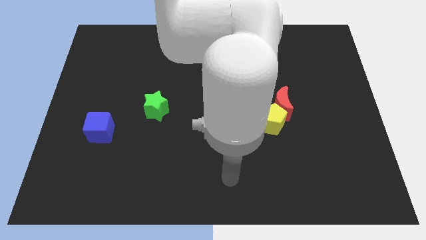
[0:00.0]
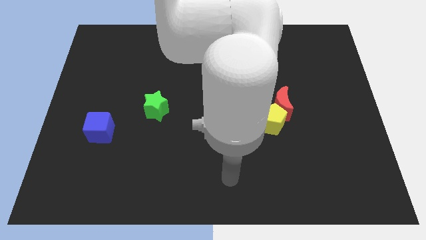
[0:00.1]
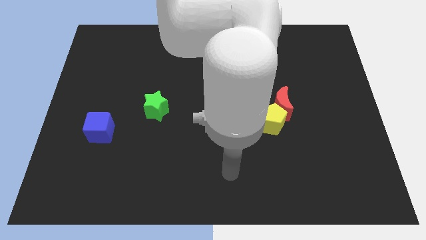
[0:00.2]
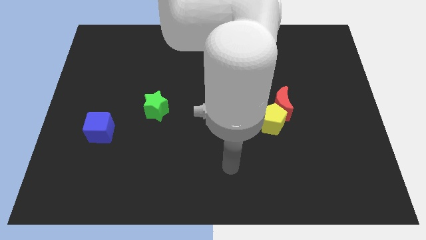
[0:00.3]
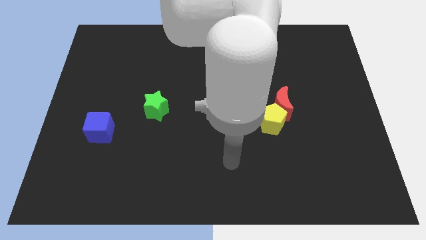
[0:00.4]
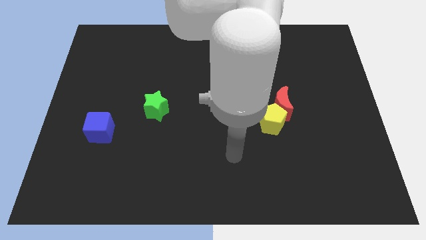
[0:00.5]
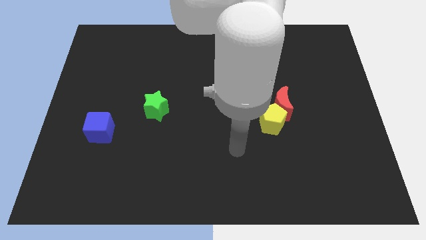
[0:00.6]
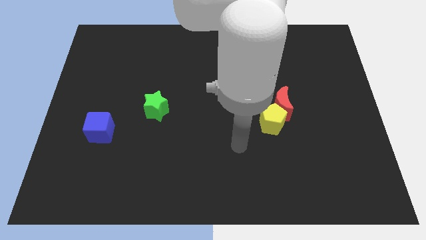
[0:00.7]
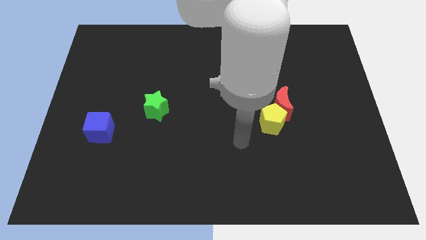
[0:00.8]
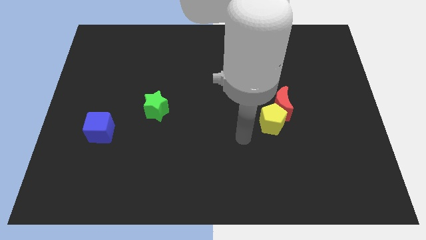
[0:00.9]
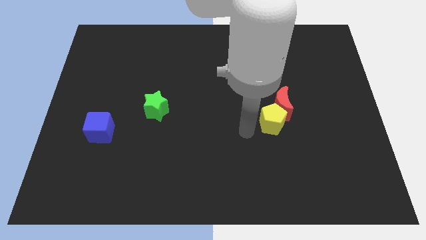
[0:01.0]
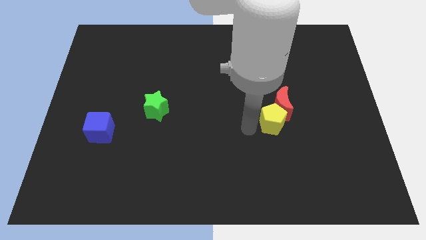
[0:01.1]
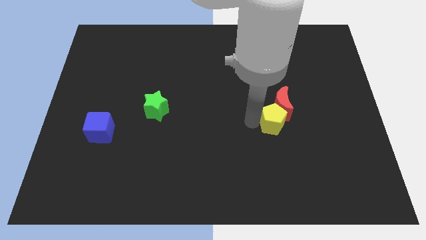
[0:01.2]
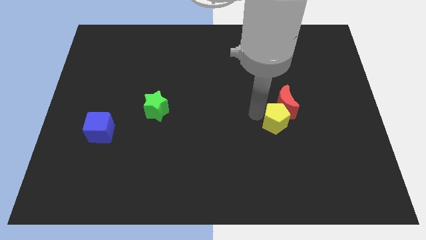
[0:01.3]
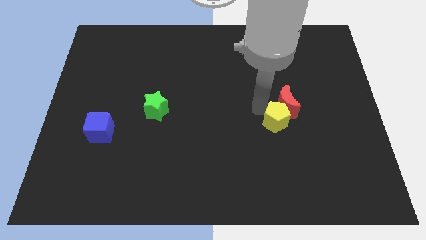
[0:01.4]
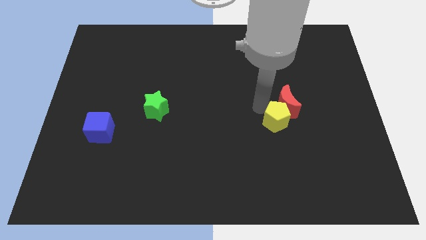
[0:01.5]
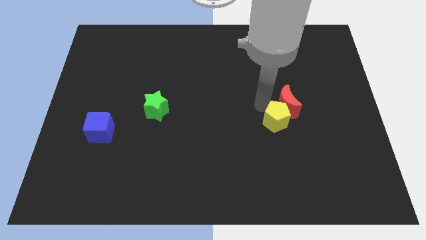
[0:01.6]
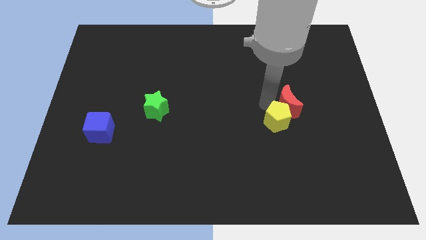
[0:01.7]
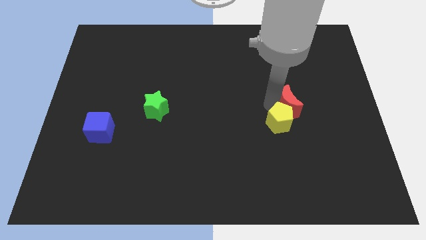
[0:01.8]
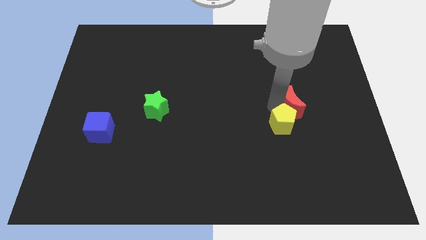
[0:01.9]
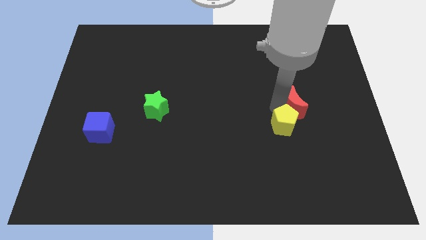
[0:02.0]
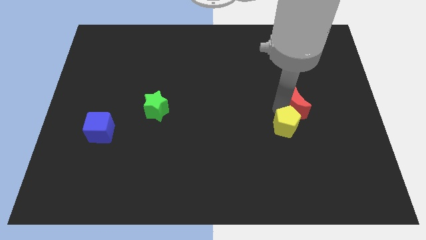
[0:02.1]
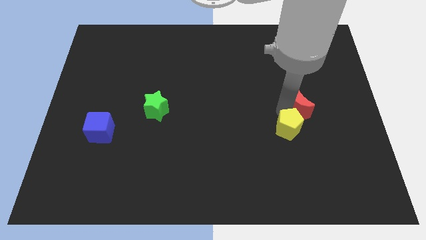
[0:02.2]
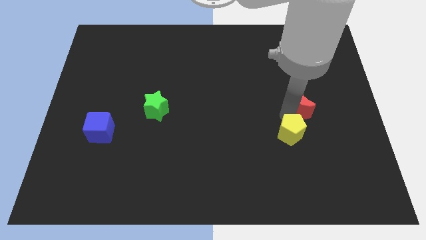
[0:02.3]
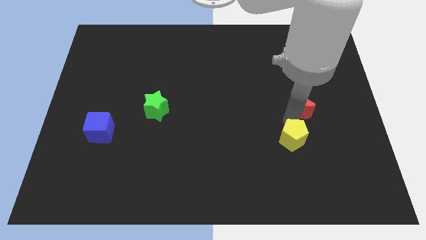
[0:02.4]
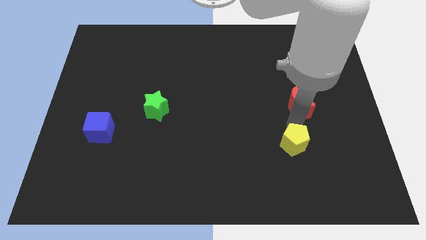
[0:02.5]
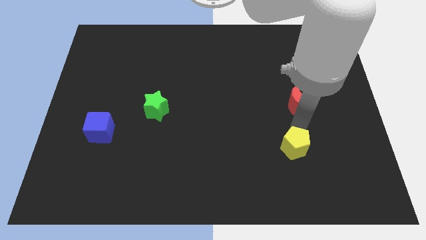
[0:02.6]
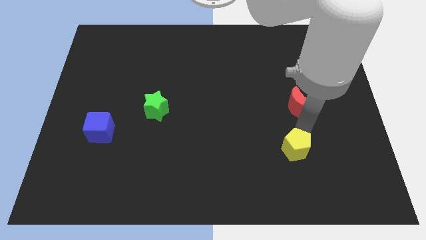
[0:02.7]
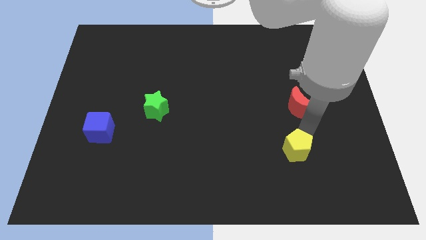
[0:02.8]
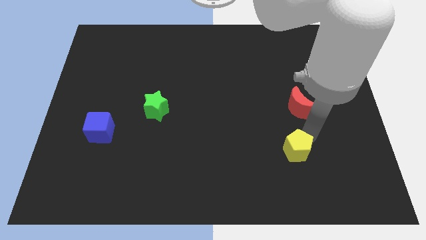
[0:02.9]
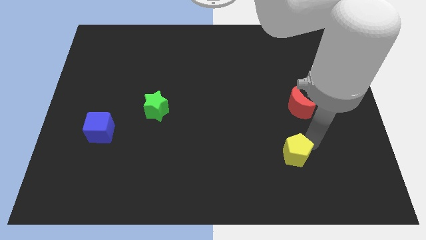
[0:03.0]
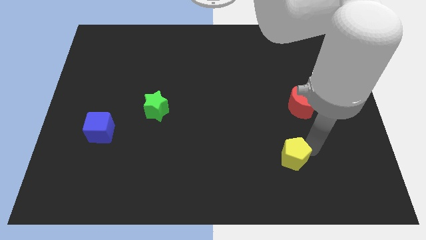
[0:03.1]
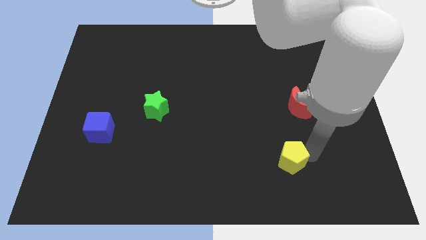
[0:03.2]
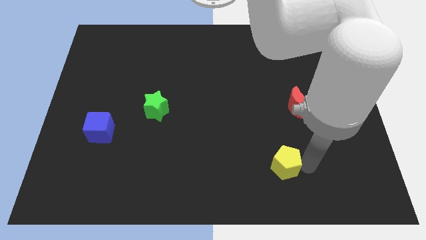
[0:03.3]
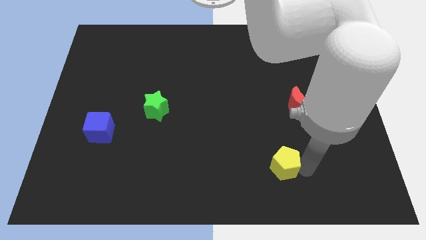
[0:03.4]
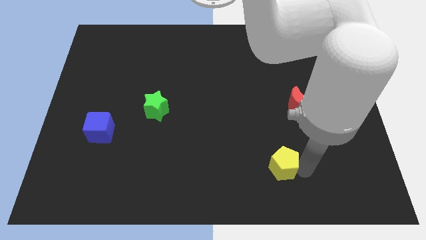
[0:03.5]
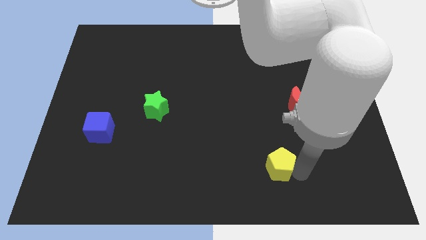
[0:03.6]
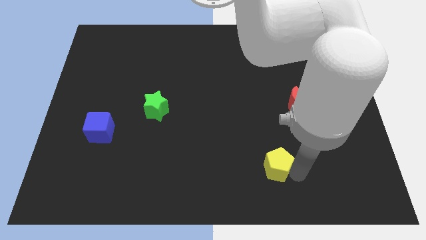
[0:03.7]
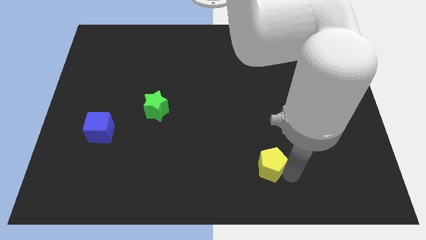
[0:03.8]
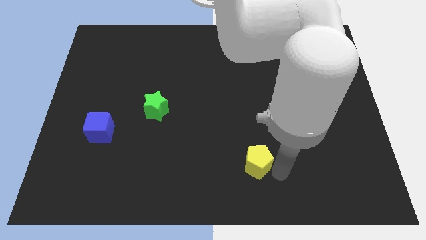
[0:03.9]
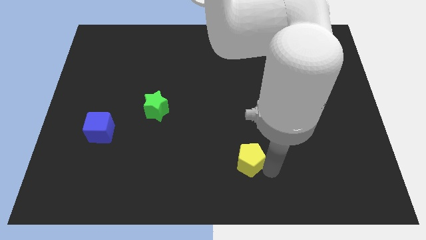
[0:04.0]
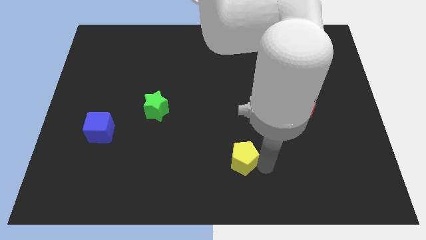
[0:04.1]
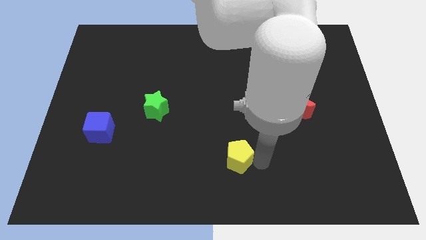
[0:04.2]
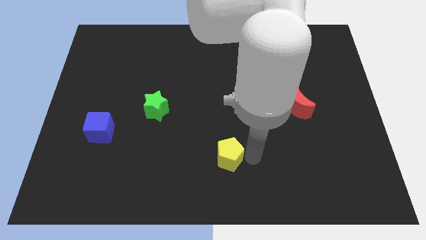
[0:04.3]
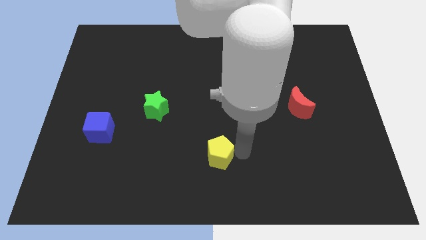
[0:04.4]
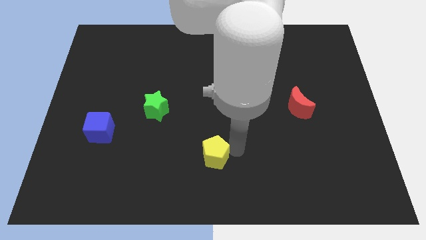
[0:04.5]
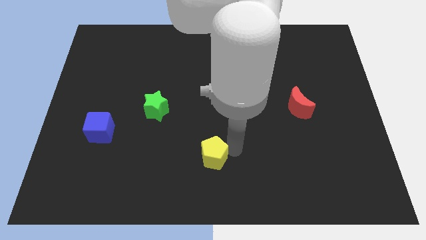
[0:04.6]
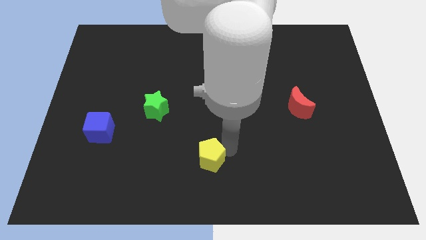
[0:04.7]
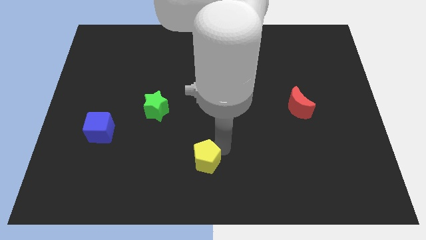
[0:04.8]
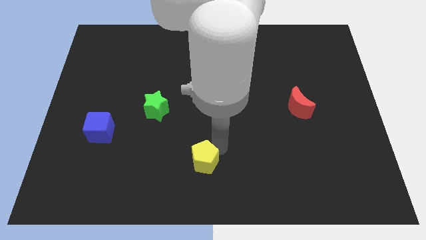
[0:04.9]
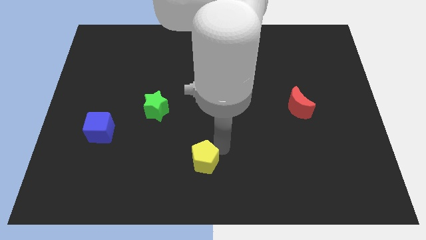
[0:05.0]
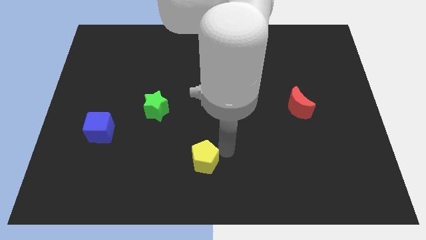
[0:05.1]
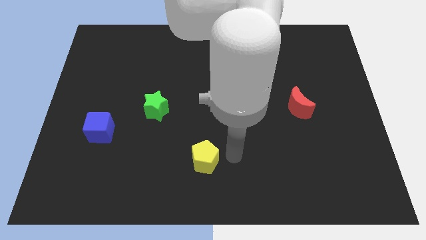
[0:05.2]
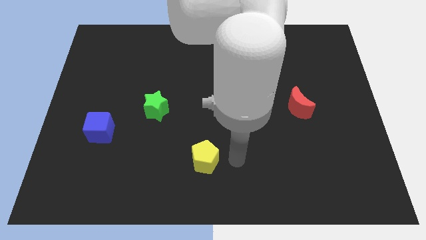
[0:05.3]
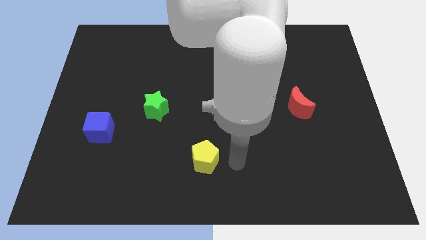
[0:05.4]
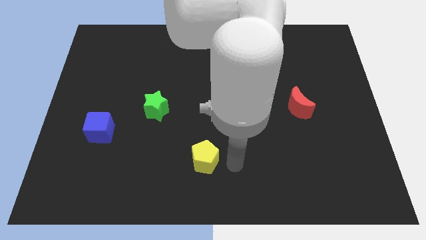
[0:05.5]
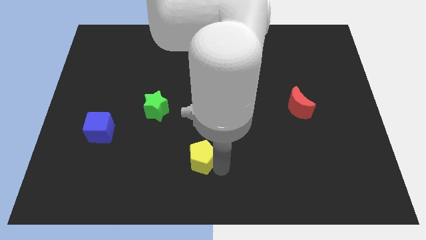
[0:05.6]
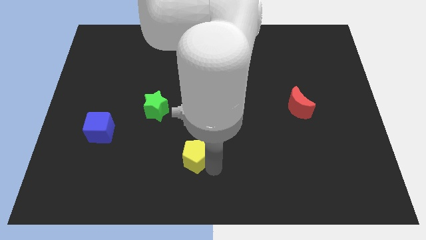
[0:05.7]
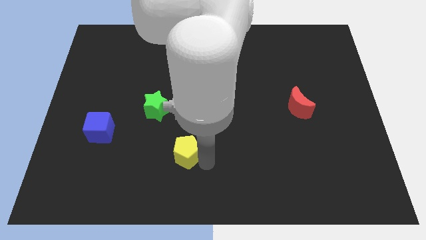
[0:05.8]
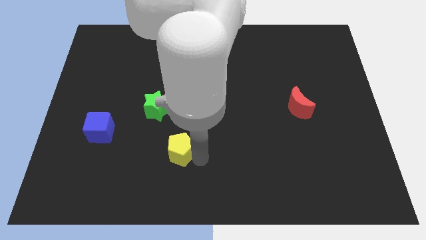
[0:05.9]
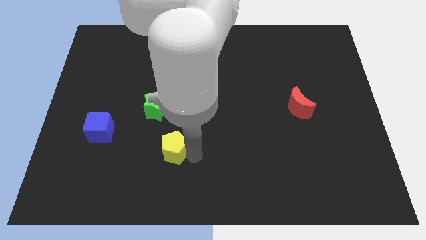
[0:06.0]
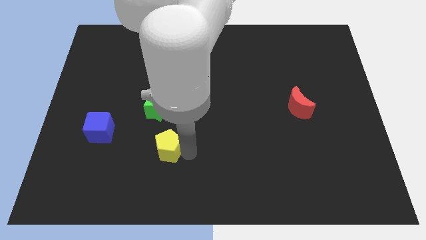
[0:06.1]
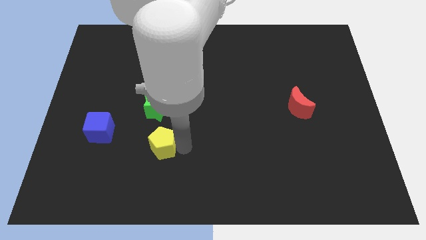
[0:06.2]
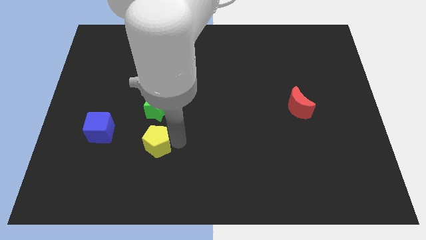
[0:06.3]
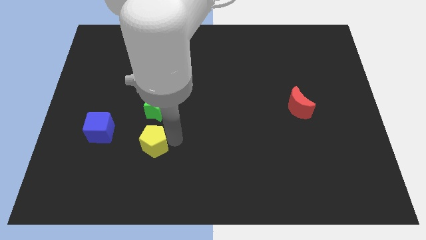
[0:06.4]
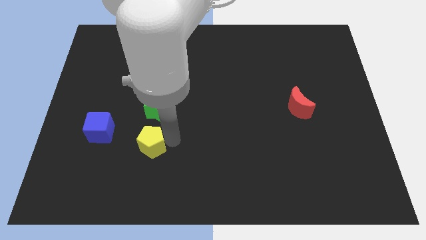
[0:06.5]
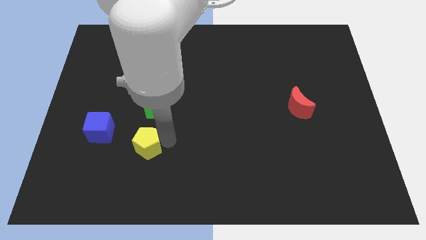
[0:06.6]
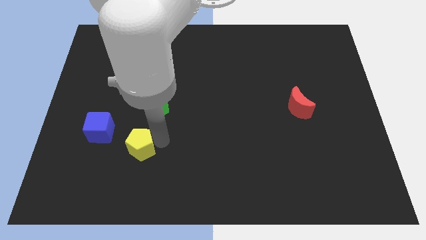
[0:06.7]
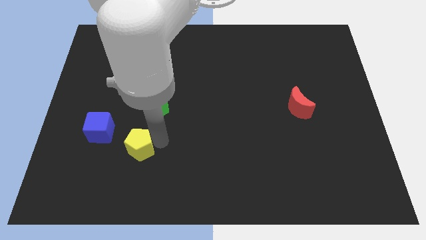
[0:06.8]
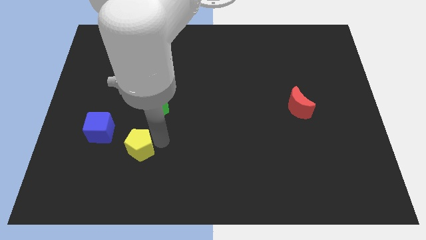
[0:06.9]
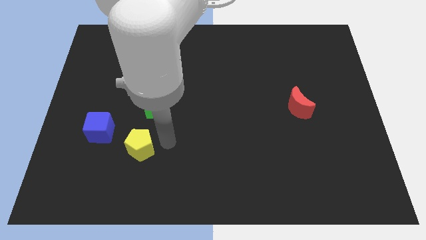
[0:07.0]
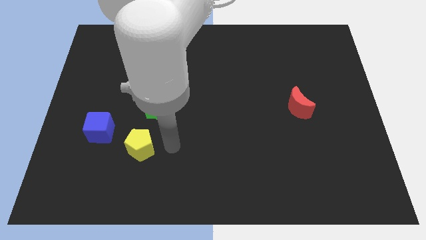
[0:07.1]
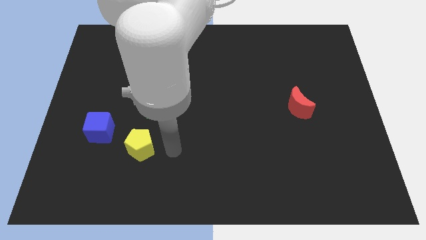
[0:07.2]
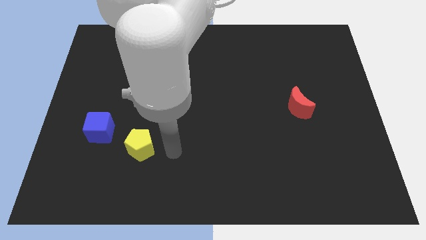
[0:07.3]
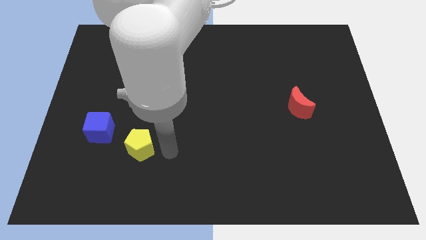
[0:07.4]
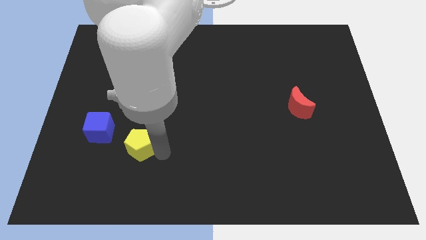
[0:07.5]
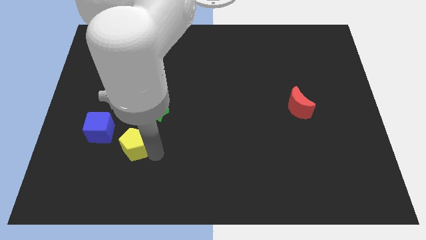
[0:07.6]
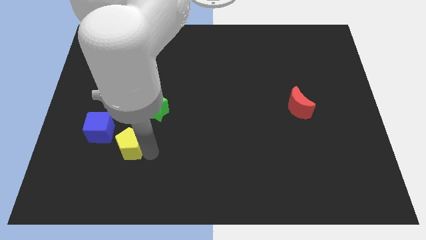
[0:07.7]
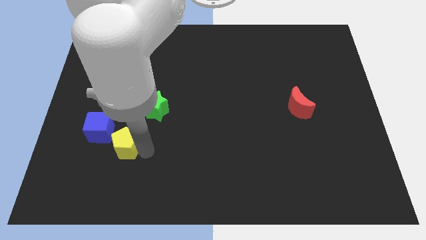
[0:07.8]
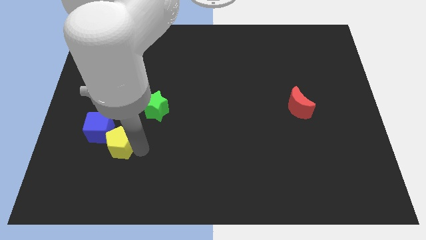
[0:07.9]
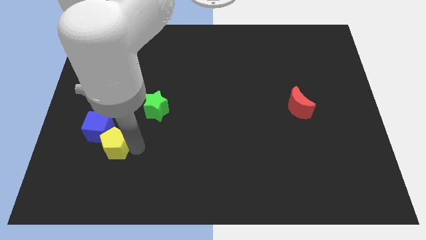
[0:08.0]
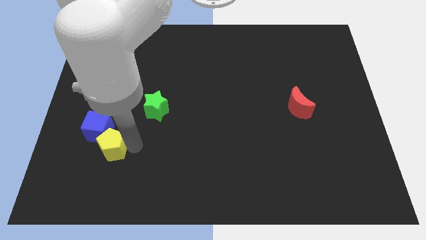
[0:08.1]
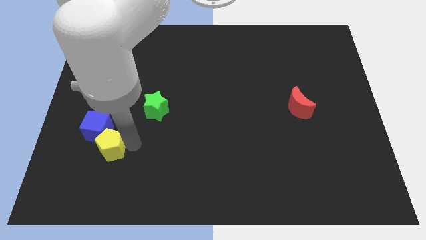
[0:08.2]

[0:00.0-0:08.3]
push the pentagon next to the blue block

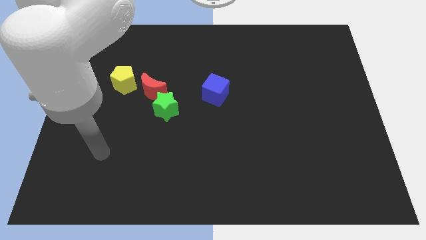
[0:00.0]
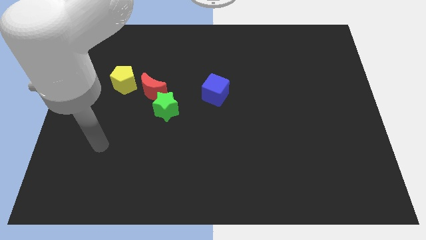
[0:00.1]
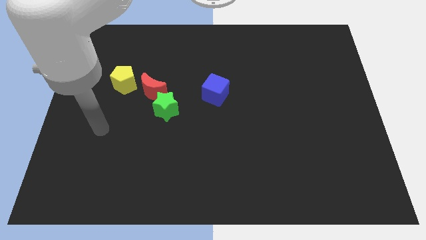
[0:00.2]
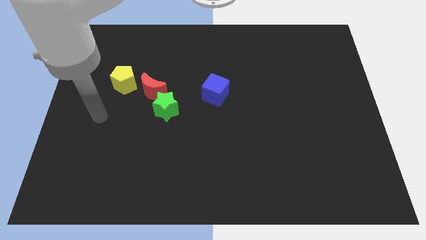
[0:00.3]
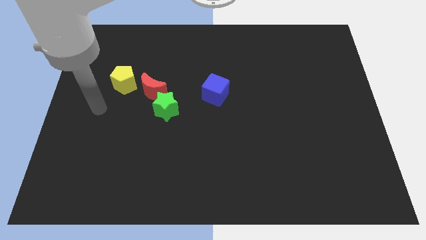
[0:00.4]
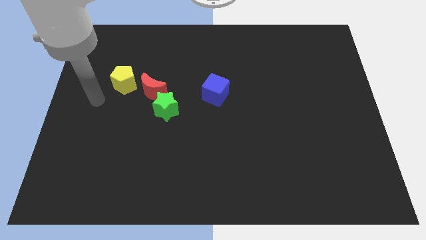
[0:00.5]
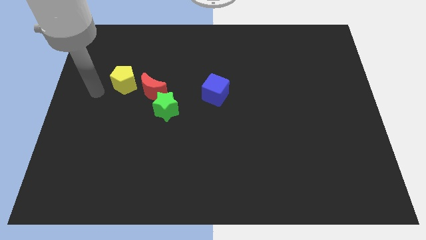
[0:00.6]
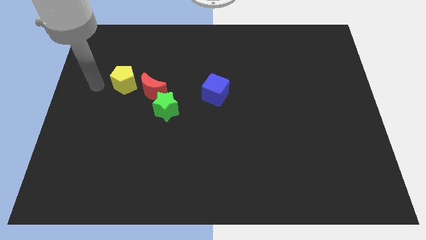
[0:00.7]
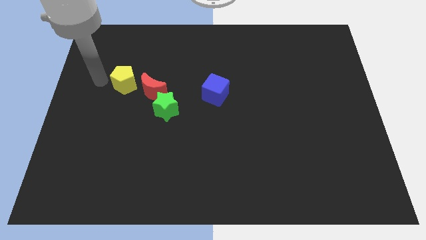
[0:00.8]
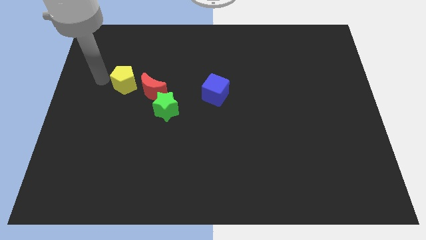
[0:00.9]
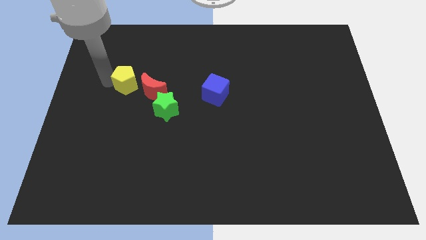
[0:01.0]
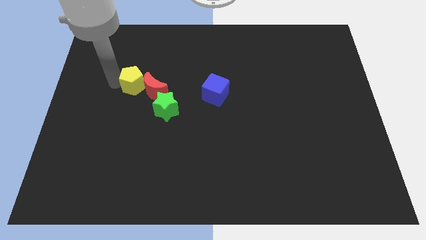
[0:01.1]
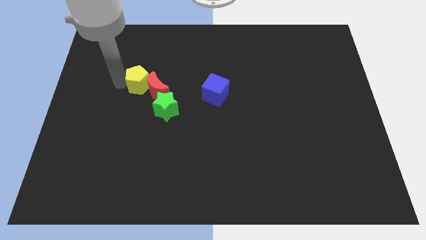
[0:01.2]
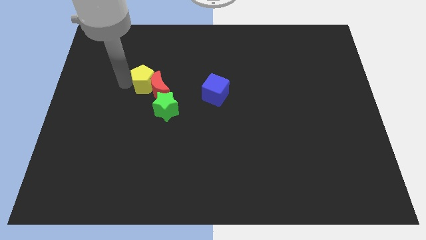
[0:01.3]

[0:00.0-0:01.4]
put the yellow pentagon towards the moon
